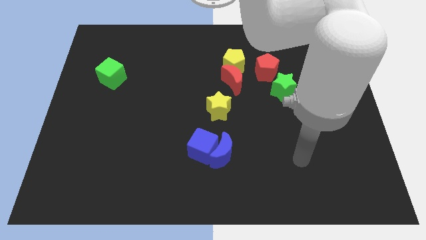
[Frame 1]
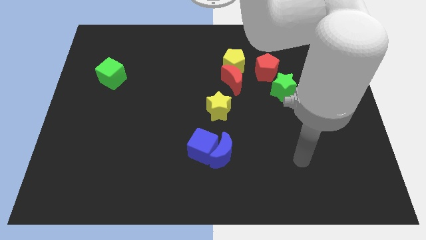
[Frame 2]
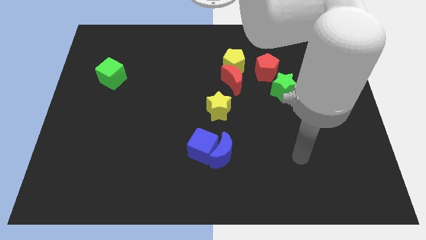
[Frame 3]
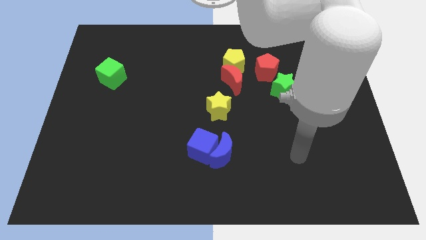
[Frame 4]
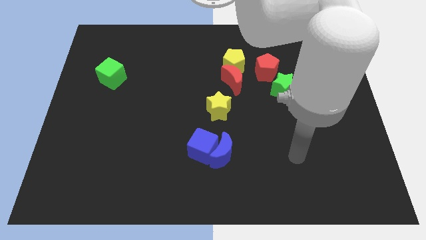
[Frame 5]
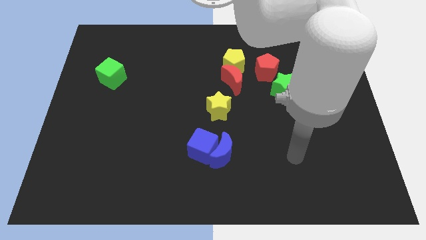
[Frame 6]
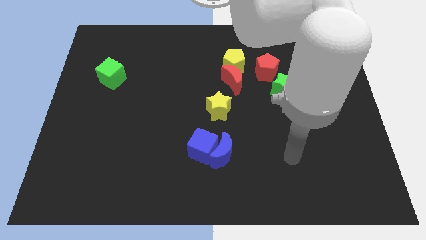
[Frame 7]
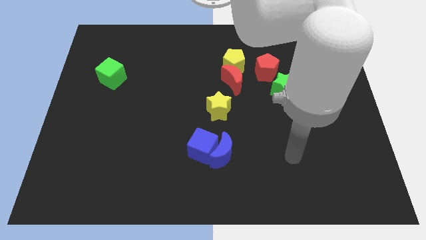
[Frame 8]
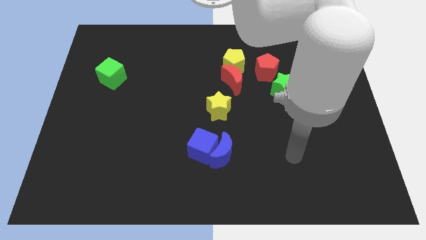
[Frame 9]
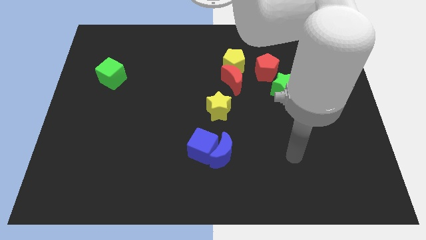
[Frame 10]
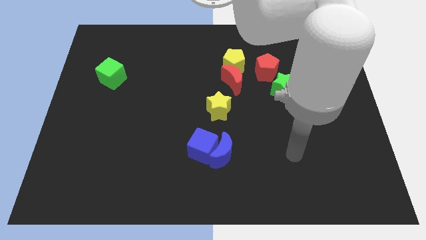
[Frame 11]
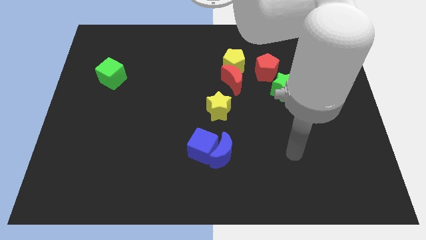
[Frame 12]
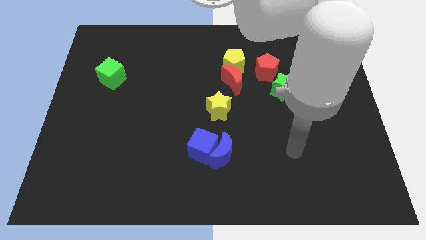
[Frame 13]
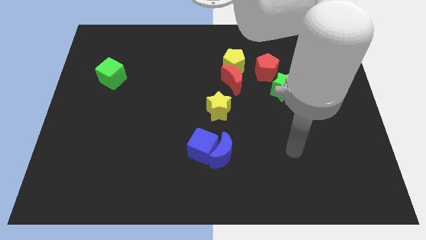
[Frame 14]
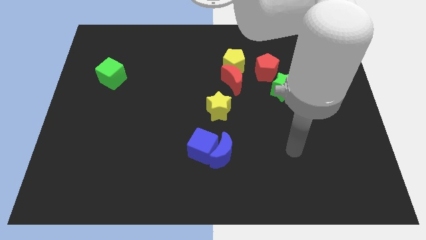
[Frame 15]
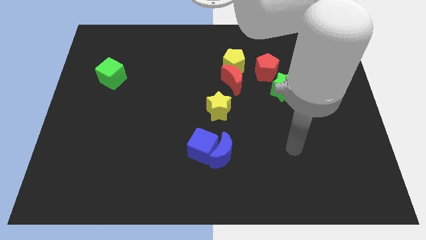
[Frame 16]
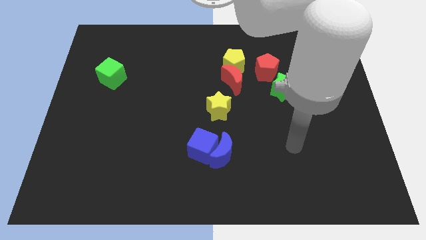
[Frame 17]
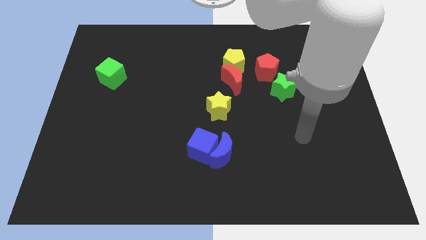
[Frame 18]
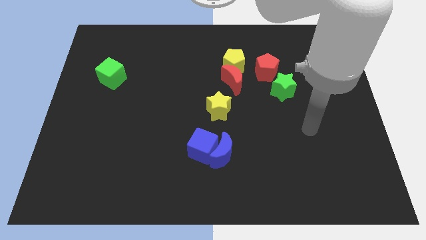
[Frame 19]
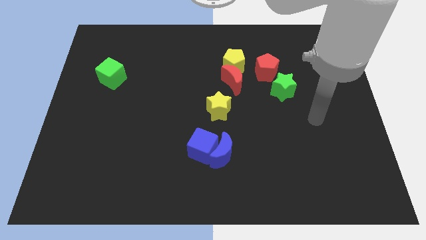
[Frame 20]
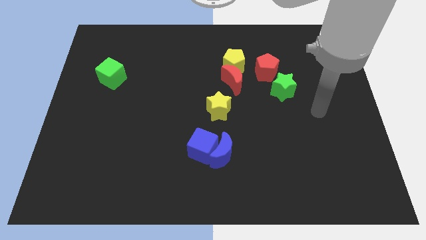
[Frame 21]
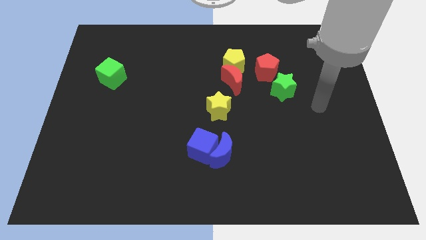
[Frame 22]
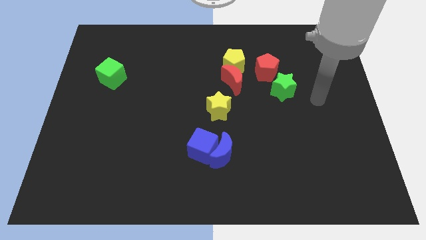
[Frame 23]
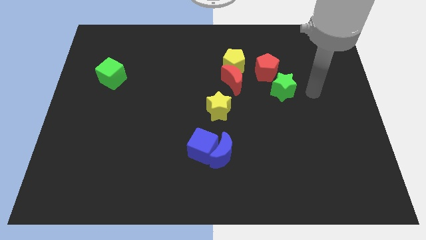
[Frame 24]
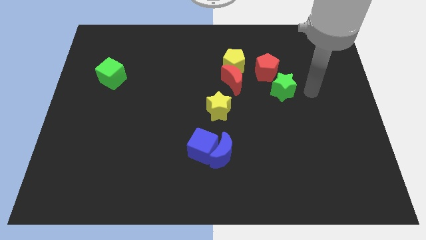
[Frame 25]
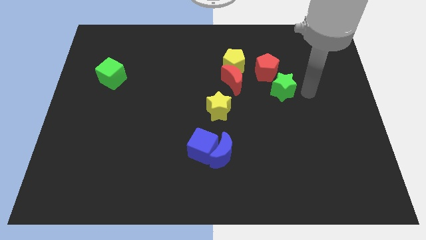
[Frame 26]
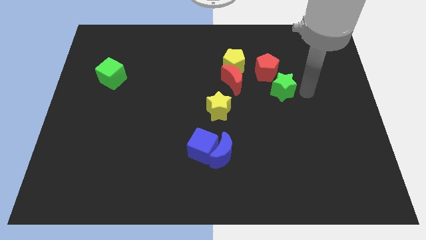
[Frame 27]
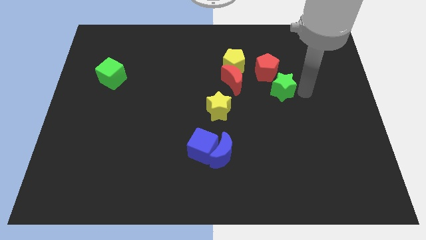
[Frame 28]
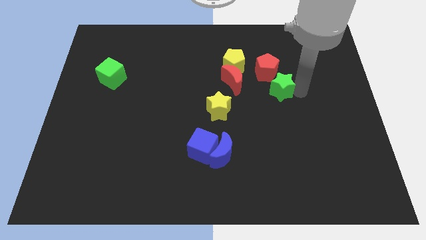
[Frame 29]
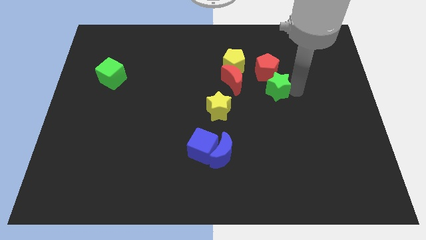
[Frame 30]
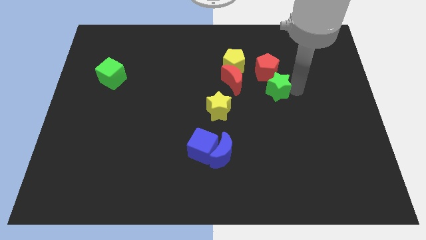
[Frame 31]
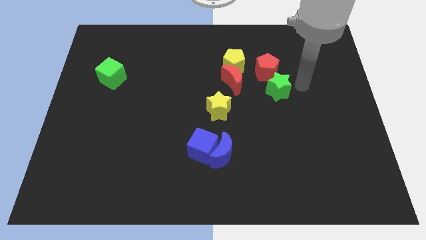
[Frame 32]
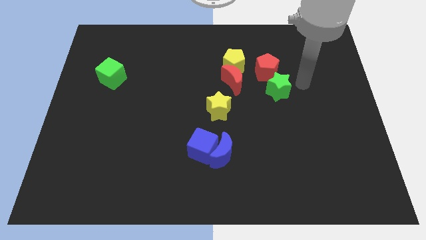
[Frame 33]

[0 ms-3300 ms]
push the green star slightly to the left

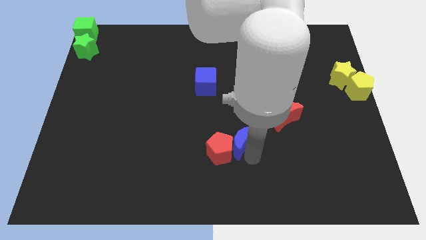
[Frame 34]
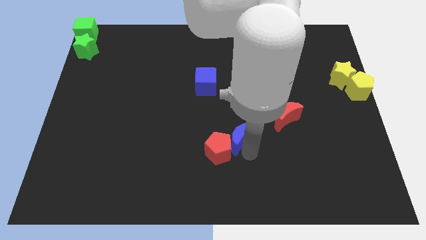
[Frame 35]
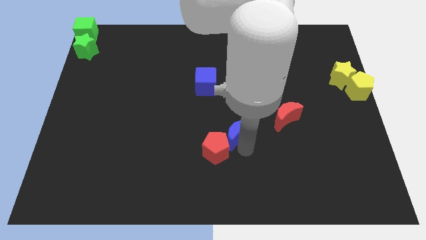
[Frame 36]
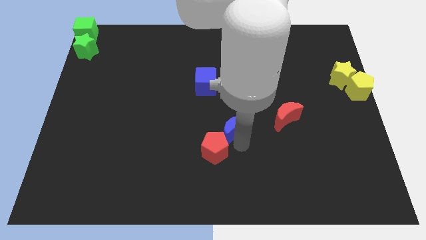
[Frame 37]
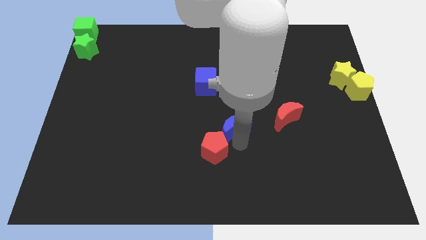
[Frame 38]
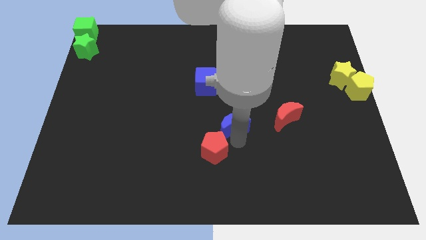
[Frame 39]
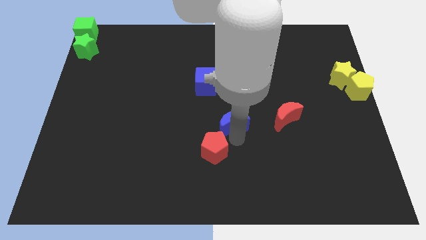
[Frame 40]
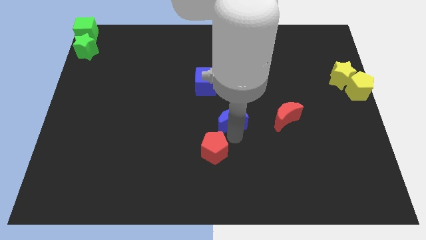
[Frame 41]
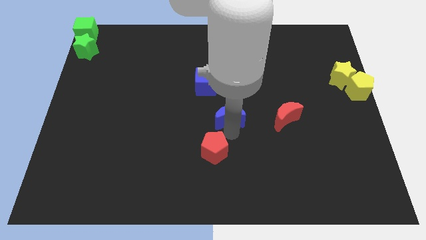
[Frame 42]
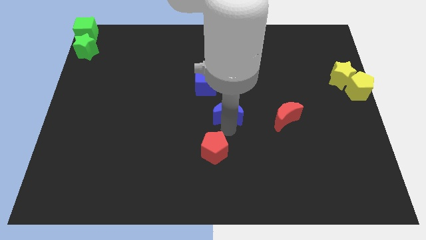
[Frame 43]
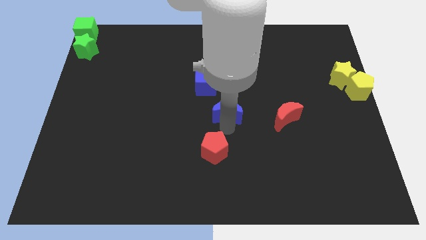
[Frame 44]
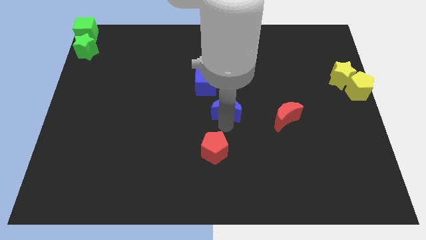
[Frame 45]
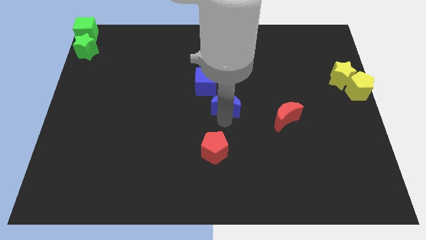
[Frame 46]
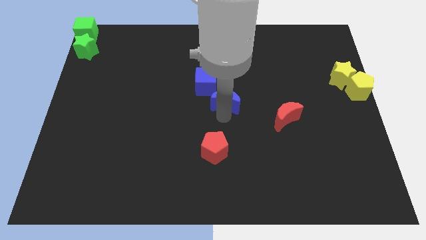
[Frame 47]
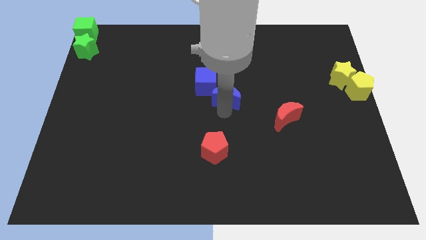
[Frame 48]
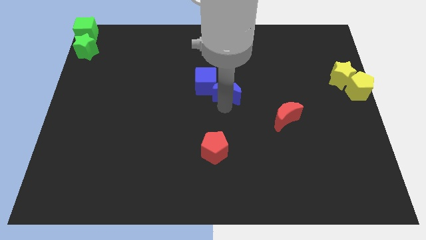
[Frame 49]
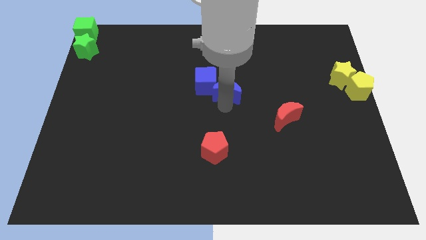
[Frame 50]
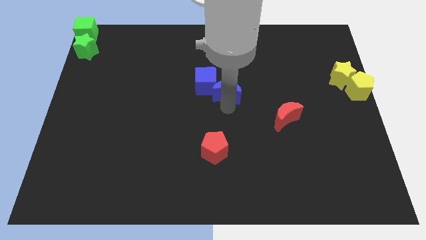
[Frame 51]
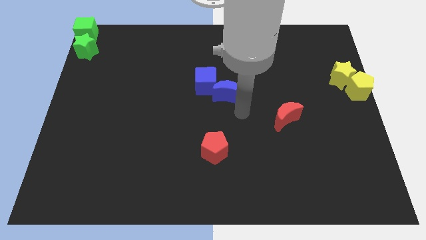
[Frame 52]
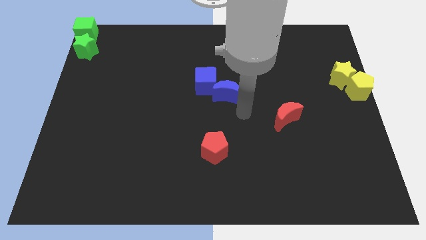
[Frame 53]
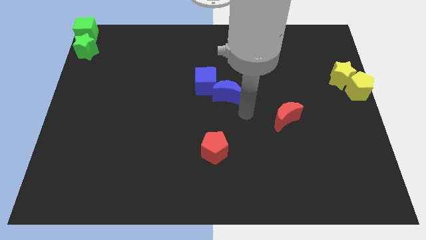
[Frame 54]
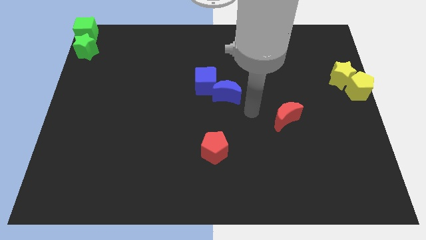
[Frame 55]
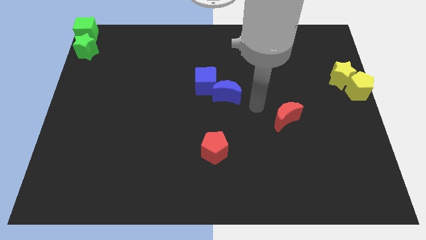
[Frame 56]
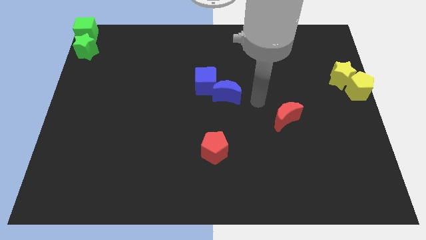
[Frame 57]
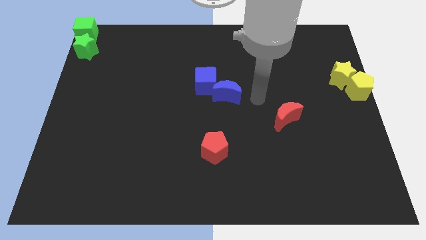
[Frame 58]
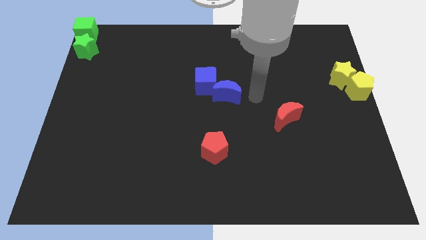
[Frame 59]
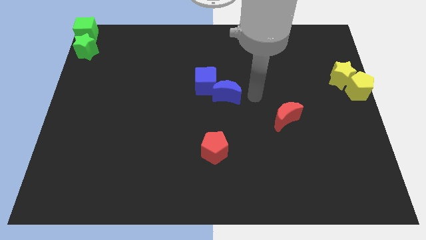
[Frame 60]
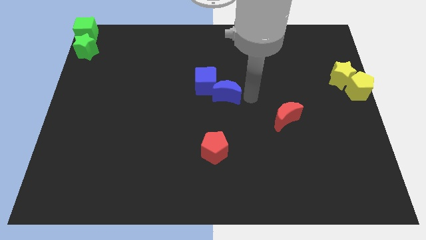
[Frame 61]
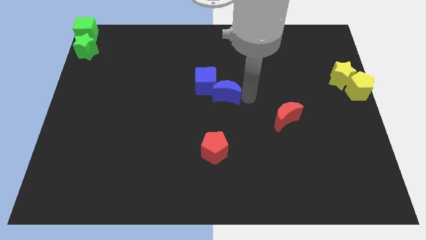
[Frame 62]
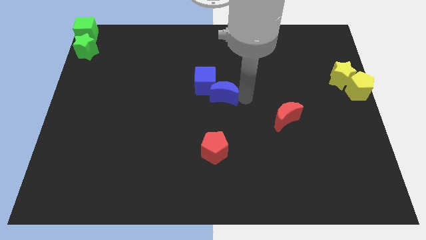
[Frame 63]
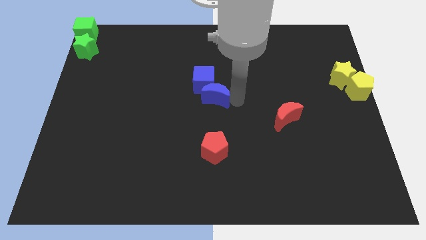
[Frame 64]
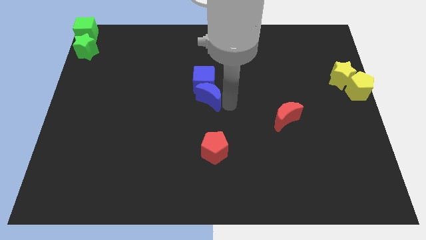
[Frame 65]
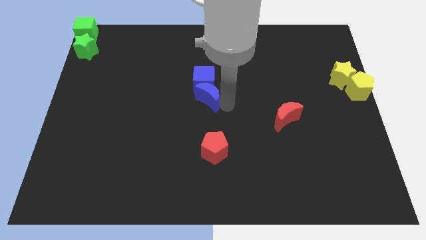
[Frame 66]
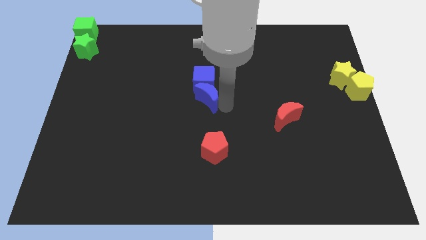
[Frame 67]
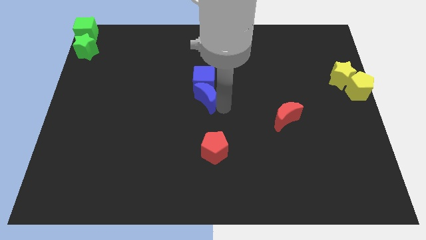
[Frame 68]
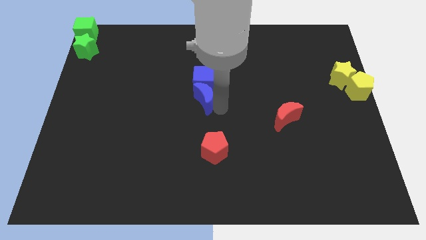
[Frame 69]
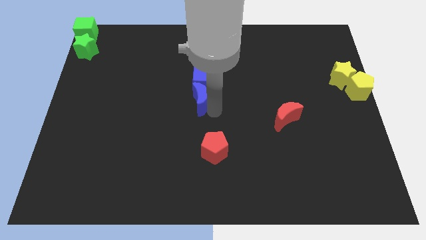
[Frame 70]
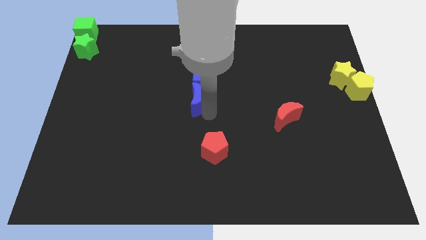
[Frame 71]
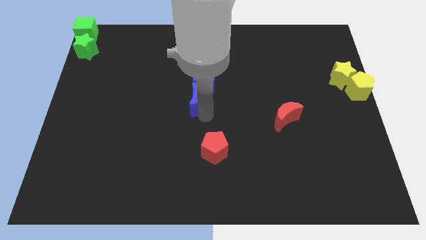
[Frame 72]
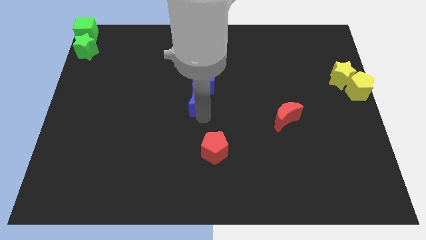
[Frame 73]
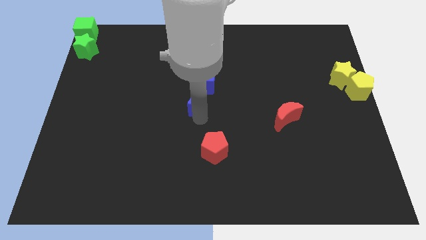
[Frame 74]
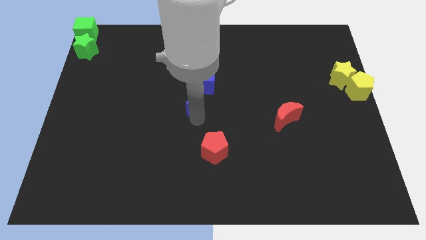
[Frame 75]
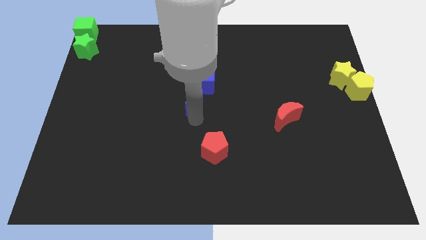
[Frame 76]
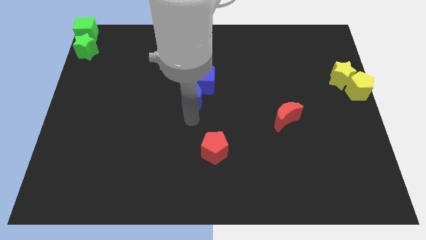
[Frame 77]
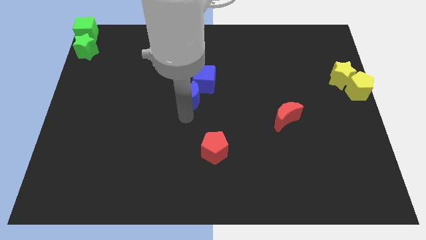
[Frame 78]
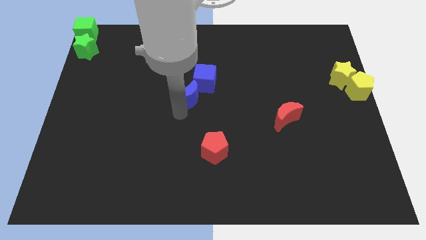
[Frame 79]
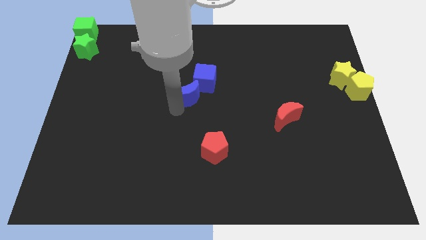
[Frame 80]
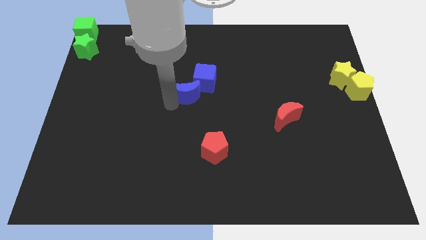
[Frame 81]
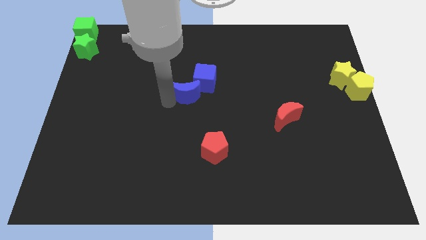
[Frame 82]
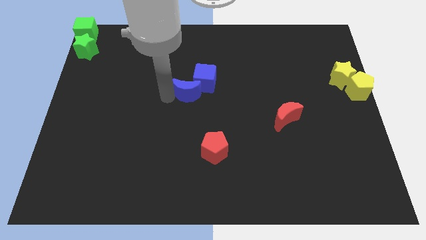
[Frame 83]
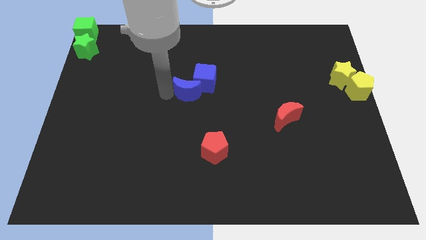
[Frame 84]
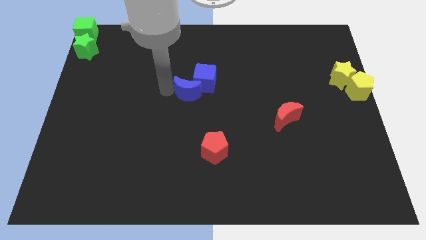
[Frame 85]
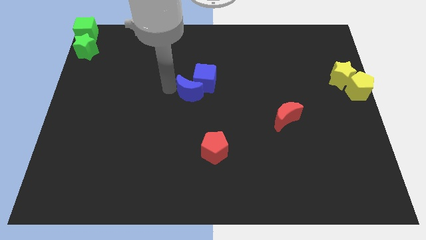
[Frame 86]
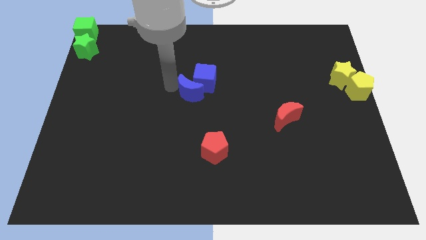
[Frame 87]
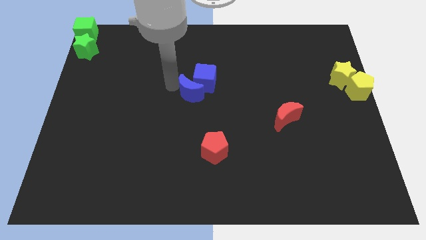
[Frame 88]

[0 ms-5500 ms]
group up the blue blocks to the left of the group of yellow blocks

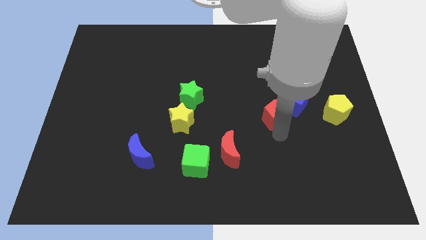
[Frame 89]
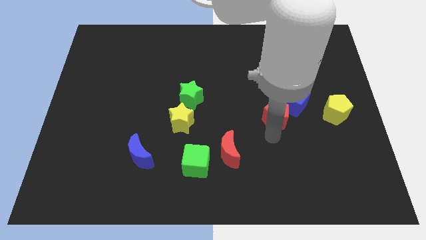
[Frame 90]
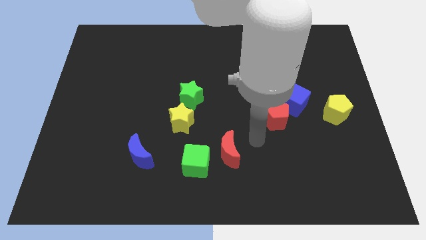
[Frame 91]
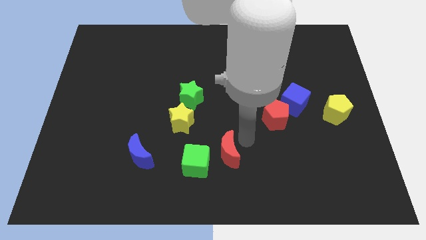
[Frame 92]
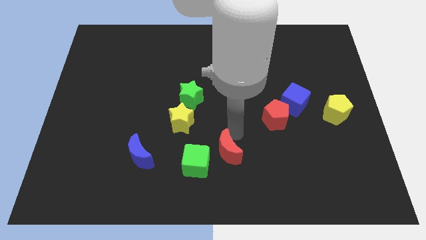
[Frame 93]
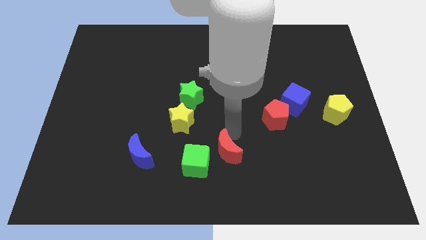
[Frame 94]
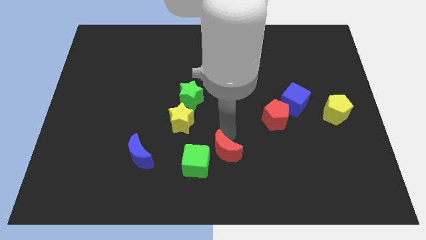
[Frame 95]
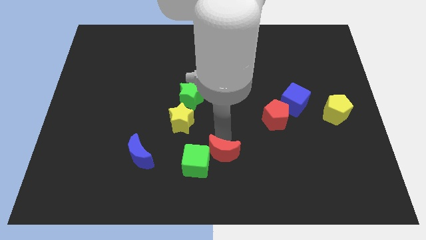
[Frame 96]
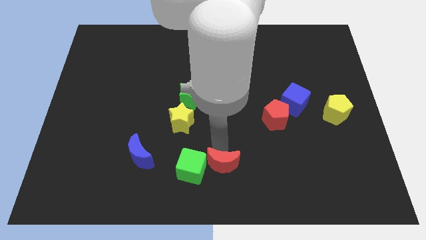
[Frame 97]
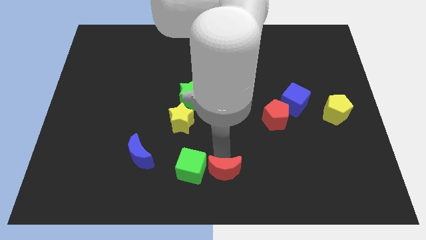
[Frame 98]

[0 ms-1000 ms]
push the red crescent slightly to the bottom
